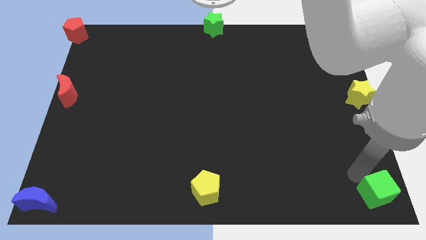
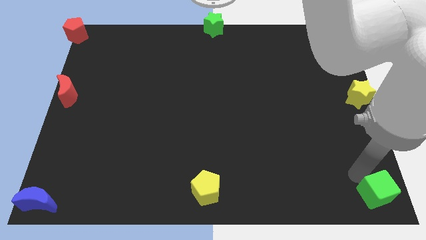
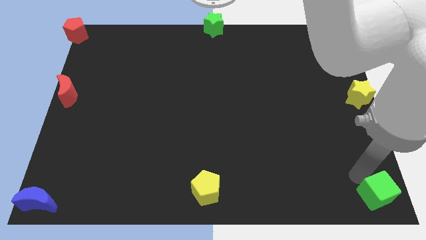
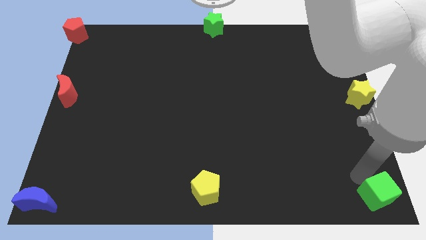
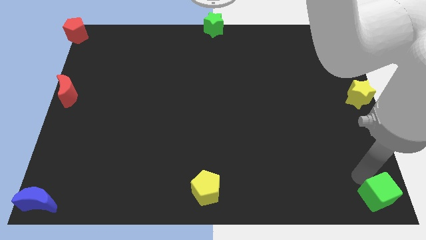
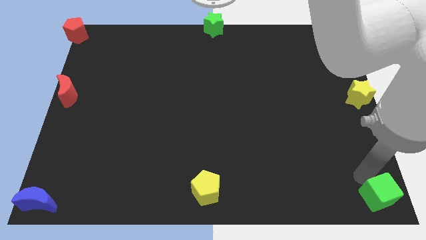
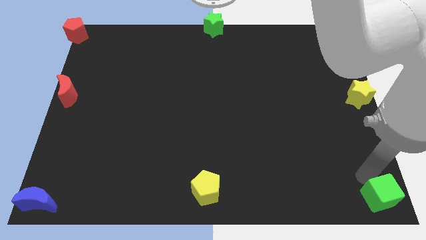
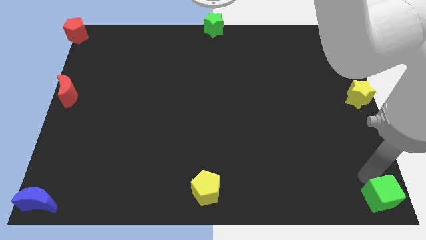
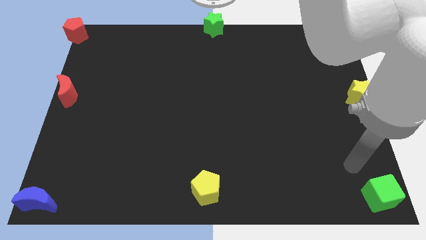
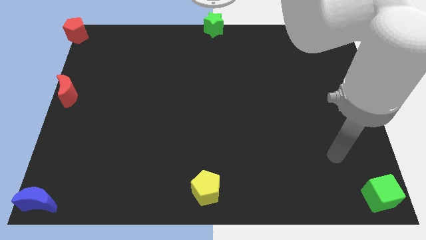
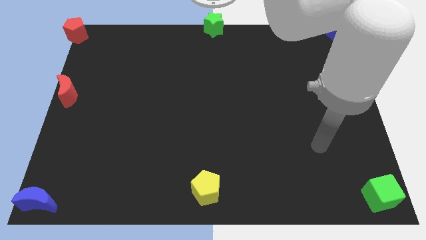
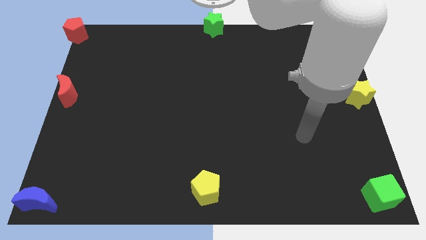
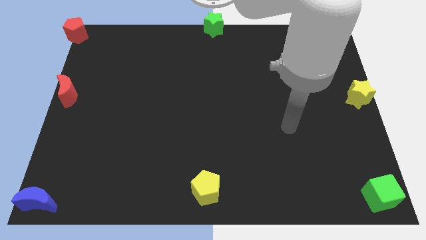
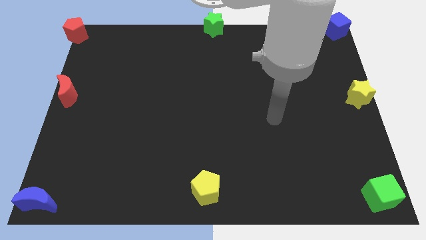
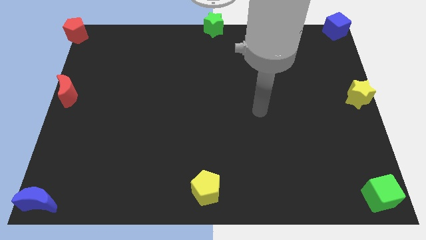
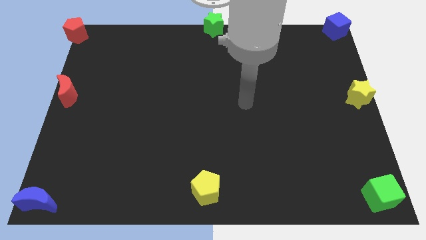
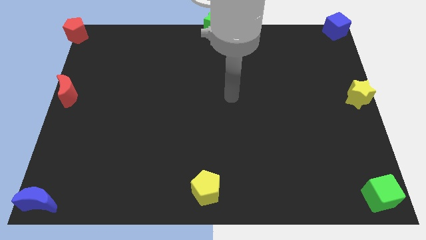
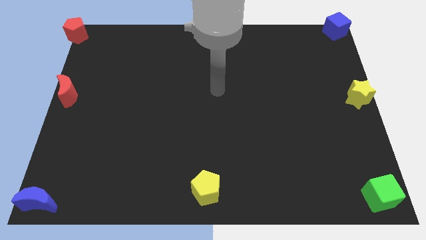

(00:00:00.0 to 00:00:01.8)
move the green cube to the bottom right corner of the table

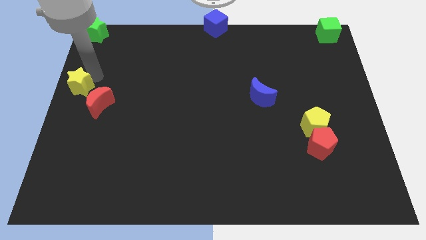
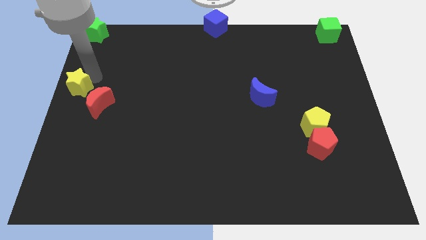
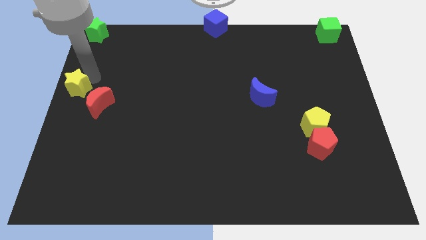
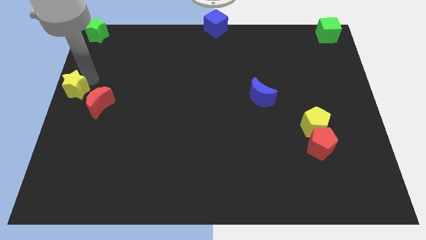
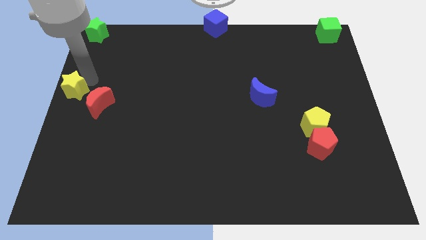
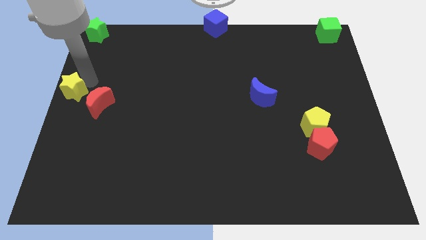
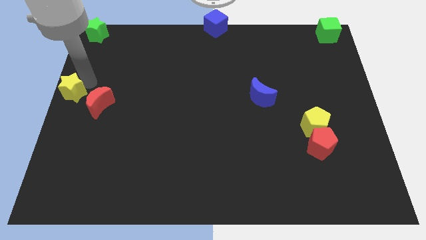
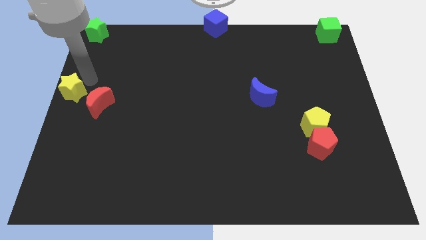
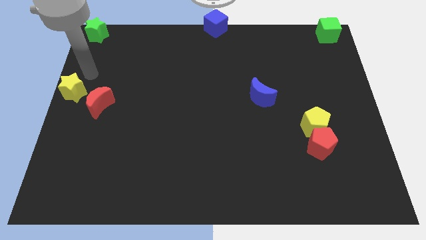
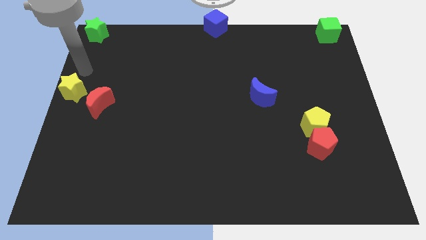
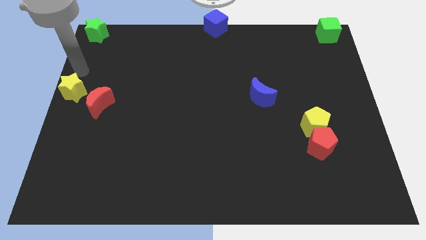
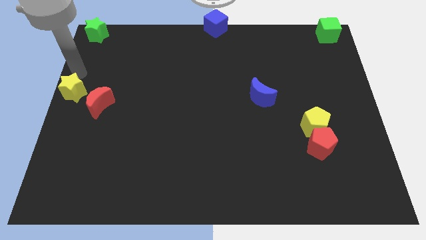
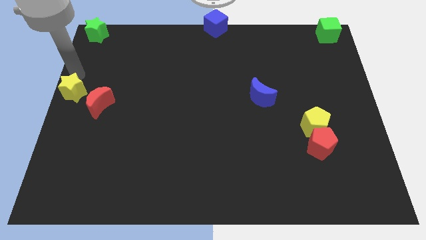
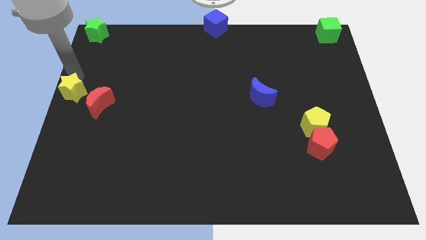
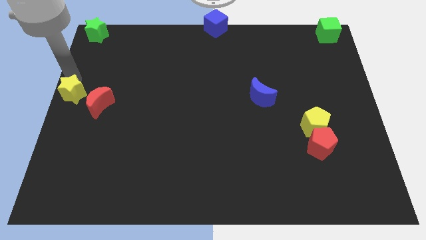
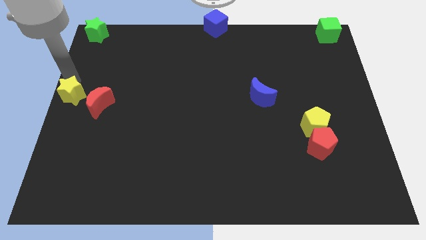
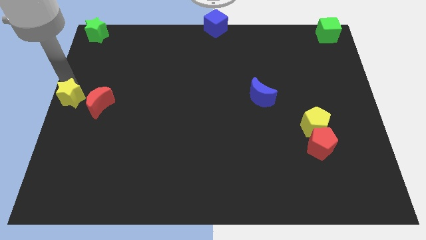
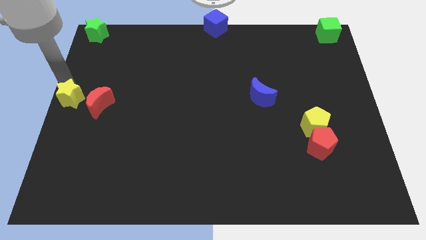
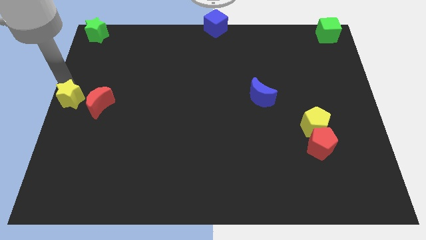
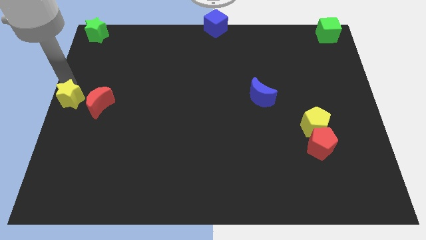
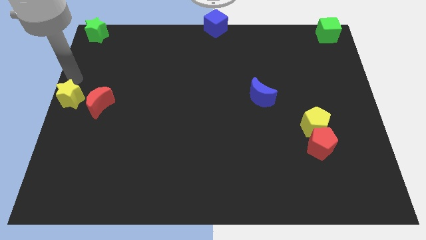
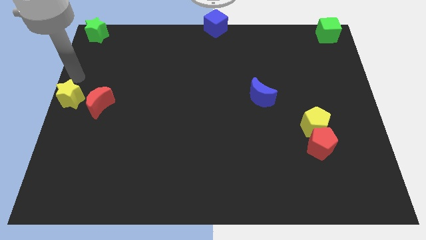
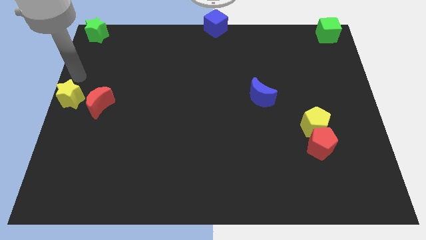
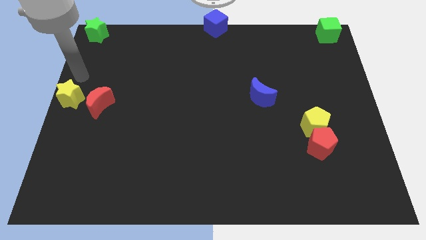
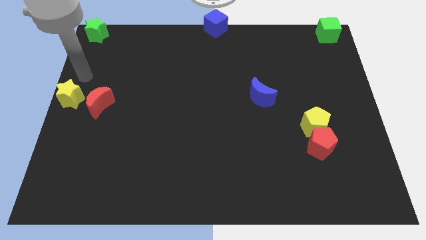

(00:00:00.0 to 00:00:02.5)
move the yellow star left to the red crescent

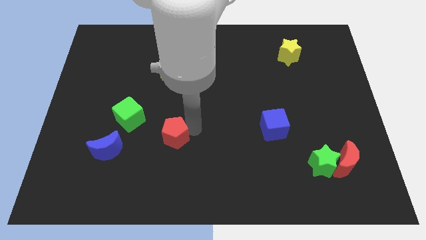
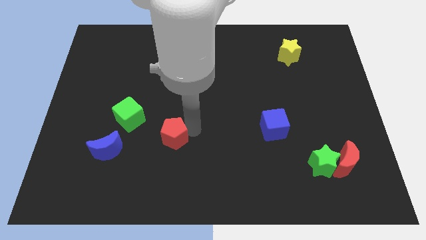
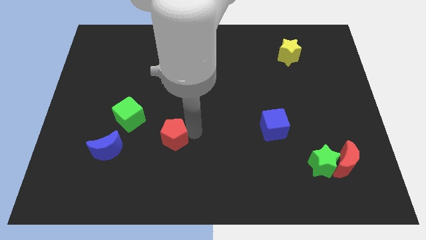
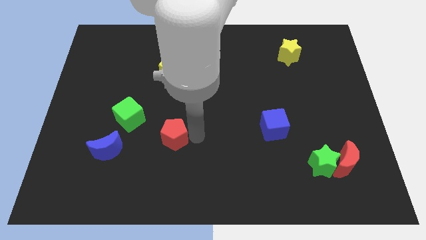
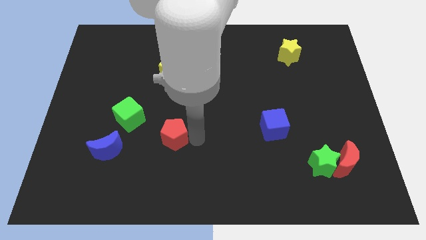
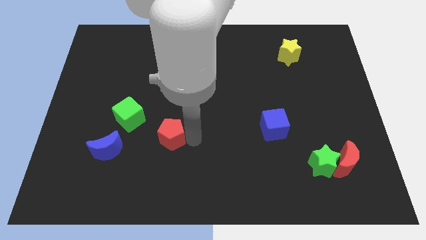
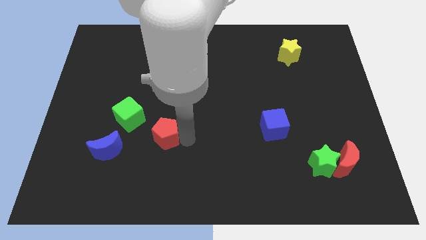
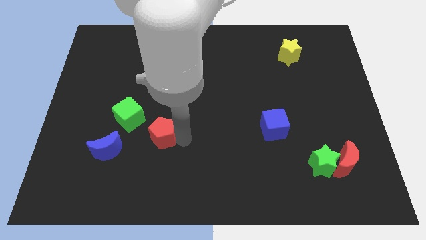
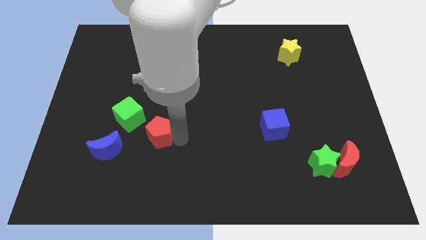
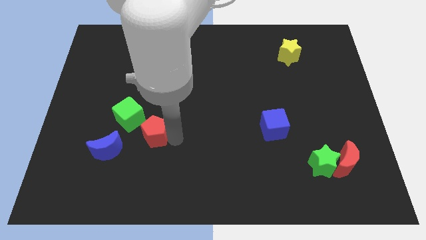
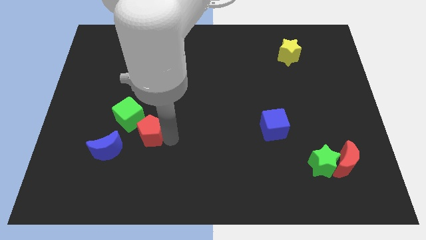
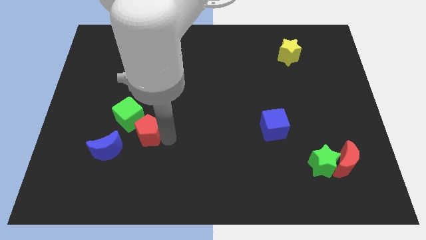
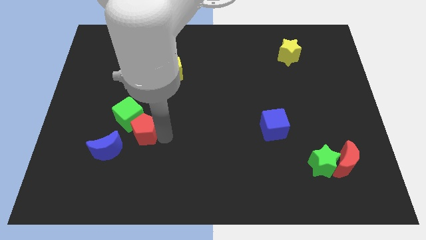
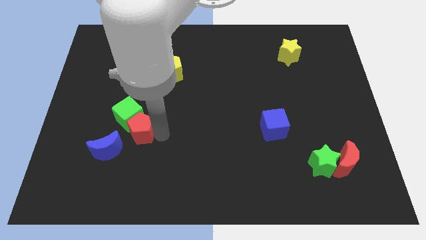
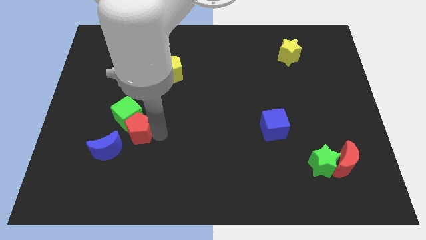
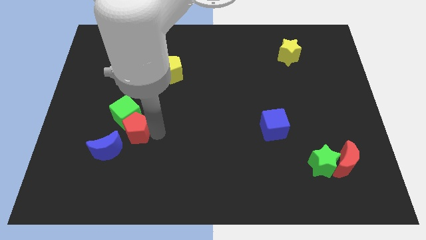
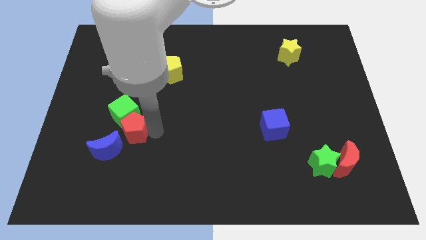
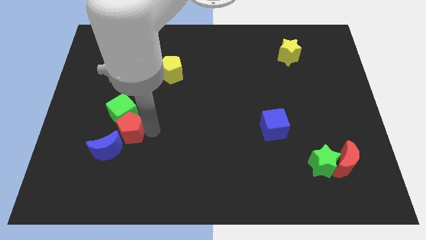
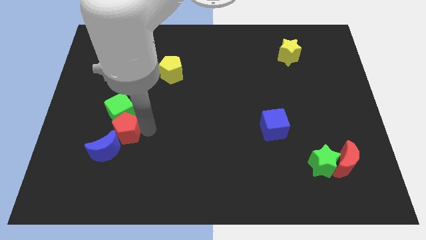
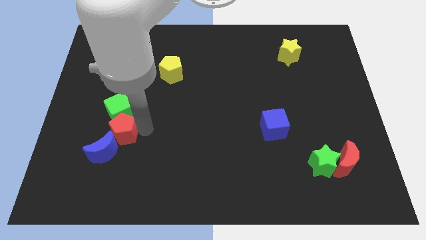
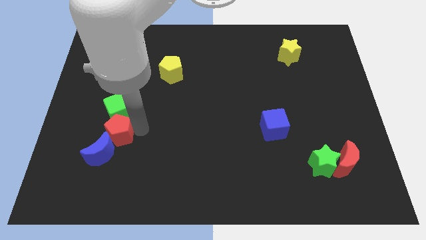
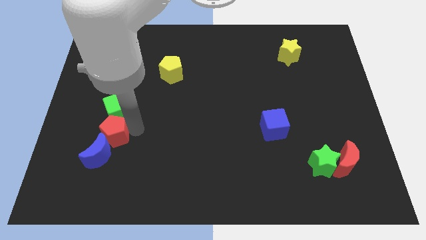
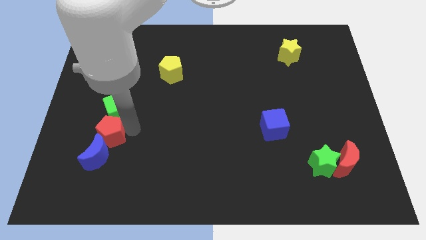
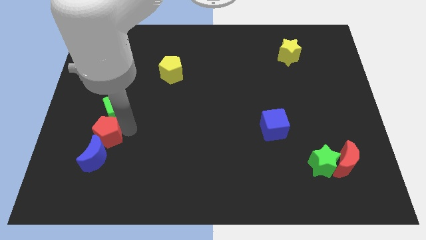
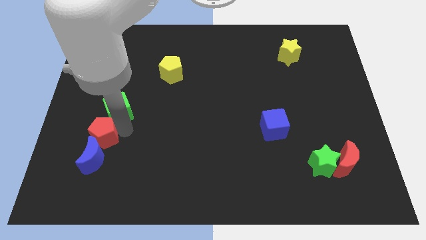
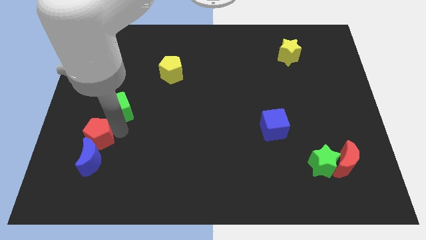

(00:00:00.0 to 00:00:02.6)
place red pentagon in between green cube and blue moon

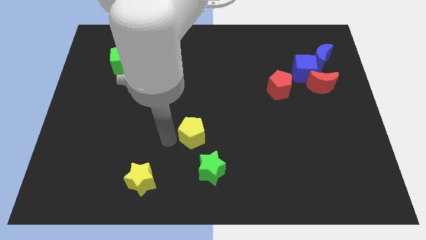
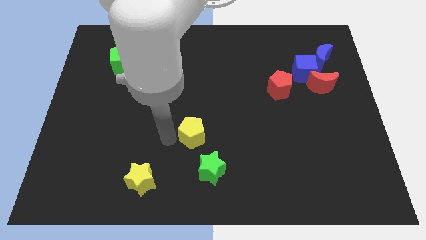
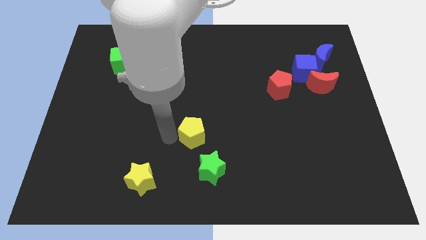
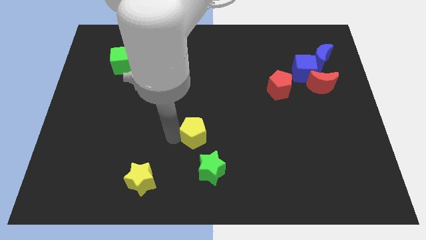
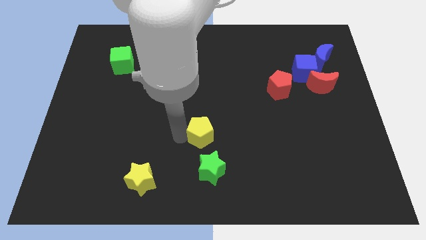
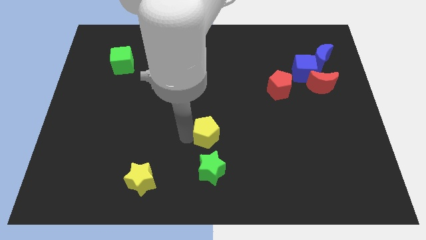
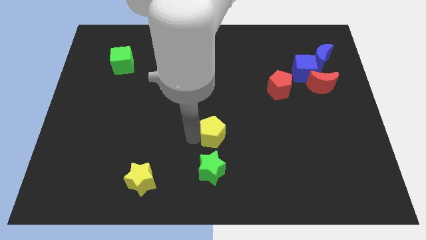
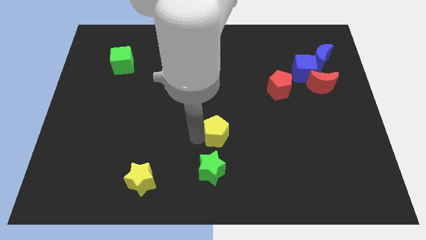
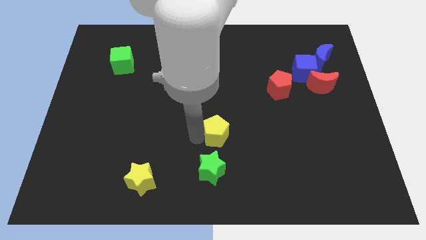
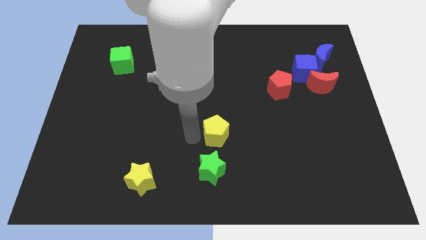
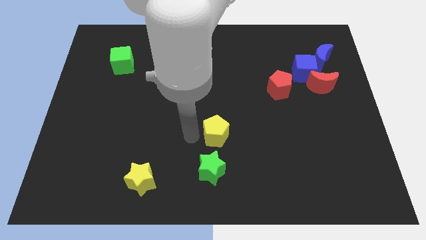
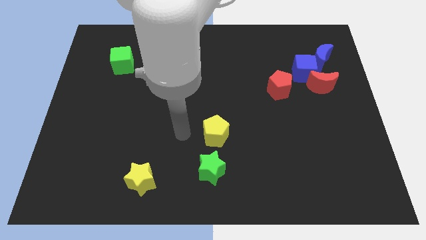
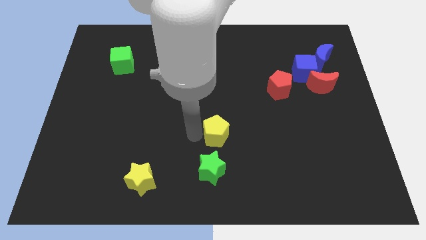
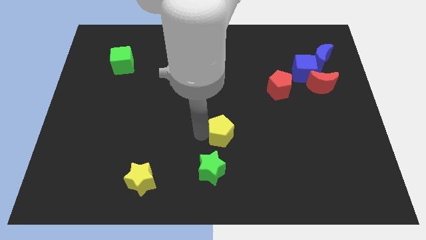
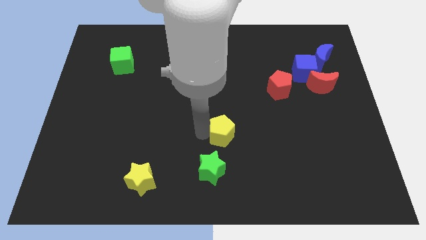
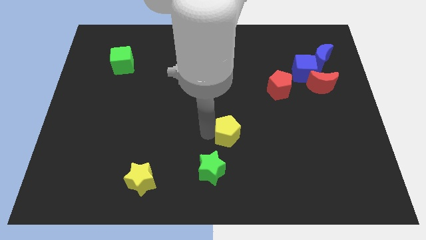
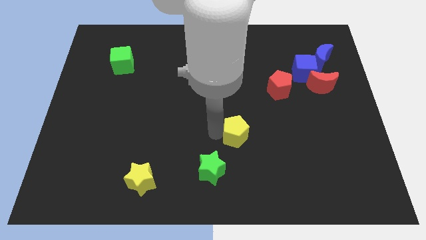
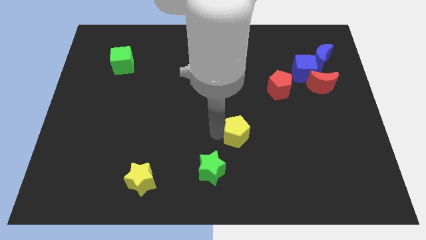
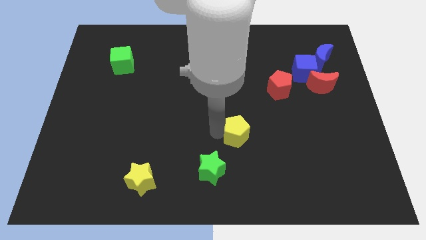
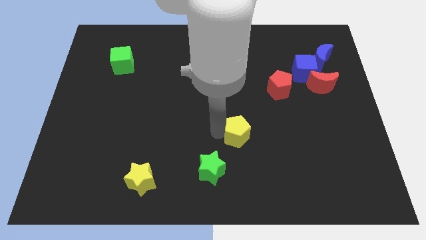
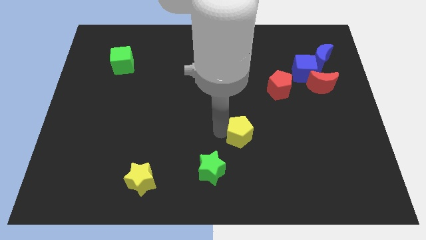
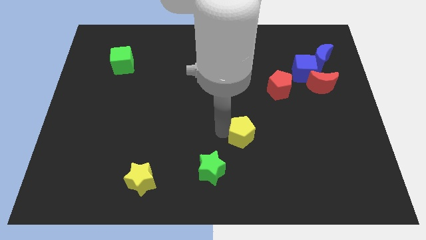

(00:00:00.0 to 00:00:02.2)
place the yellow pentagon in between the red pentagon and green star
